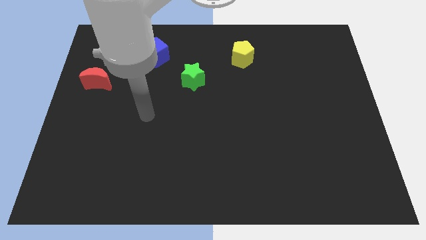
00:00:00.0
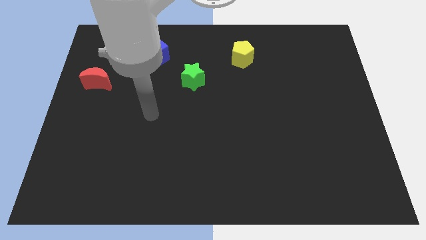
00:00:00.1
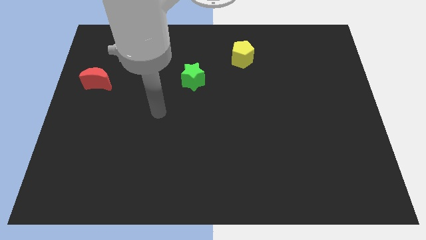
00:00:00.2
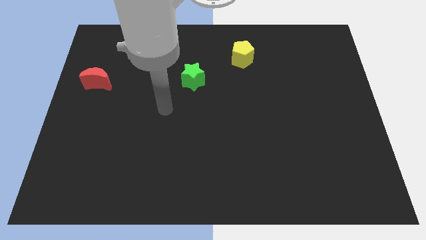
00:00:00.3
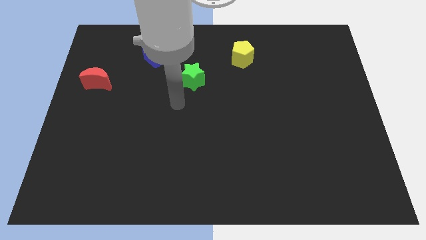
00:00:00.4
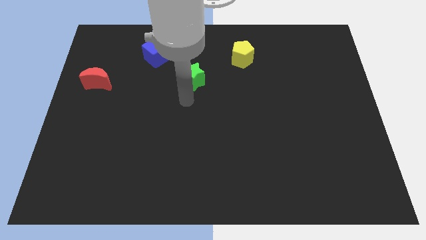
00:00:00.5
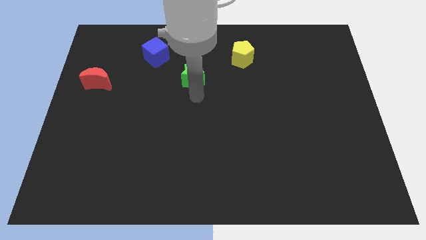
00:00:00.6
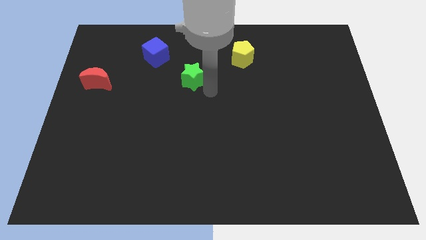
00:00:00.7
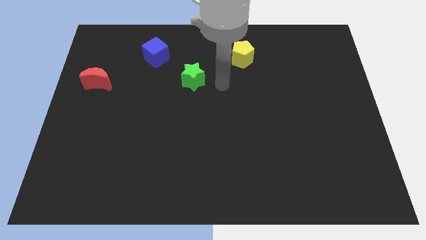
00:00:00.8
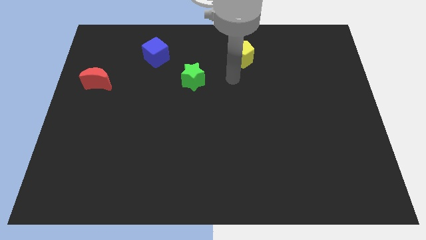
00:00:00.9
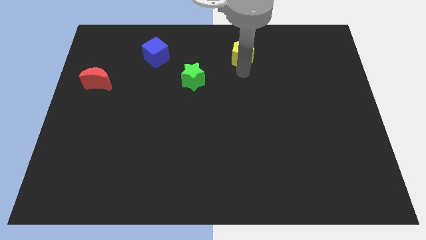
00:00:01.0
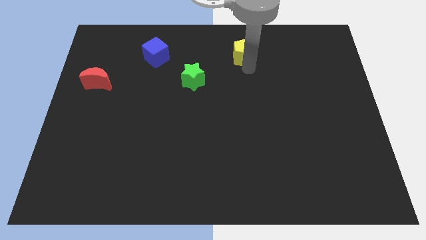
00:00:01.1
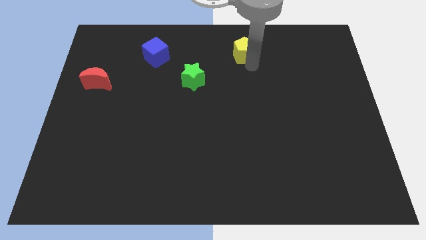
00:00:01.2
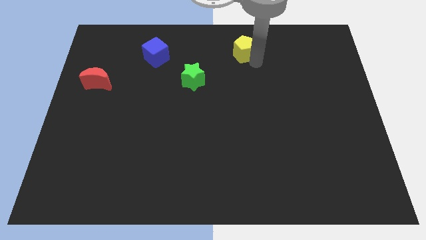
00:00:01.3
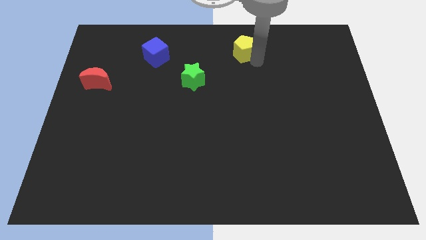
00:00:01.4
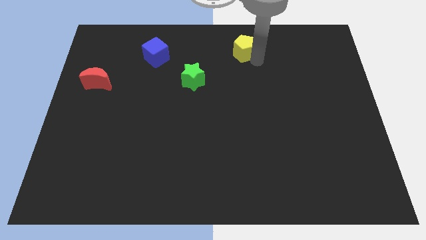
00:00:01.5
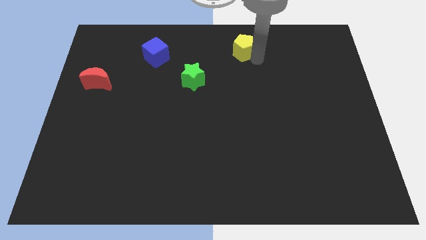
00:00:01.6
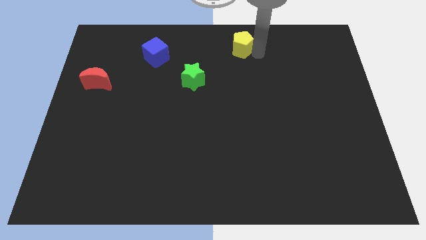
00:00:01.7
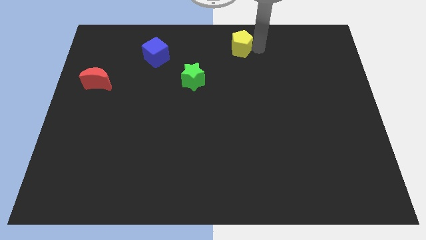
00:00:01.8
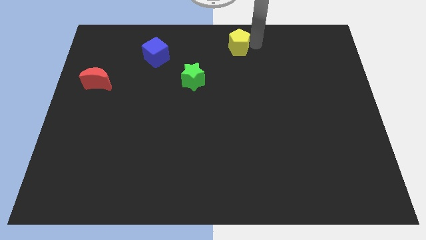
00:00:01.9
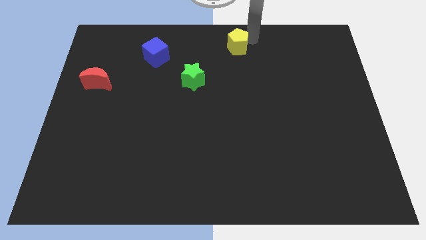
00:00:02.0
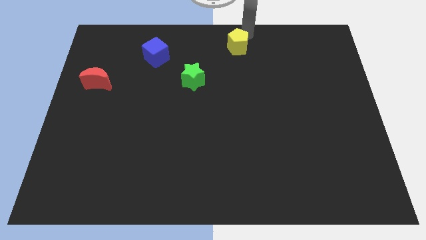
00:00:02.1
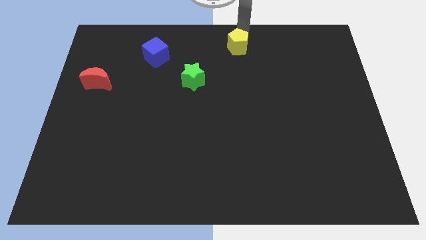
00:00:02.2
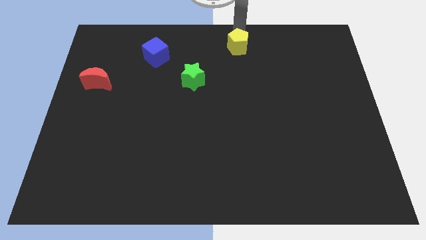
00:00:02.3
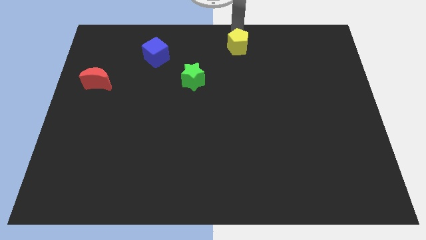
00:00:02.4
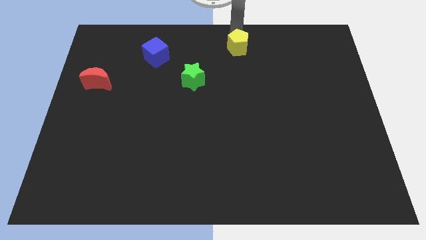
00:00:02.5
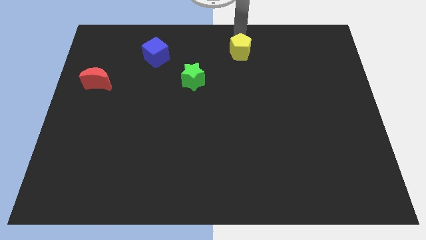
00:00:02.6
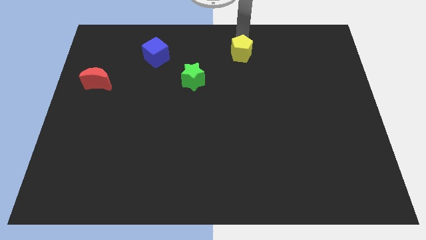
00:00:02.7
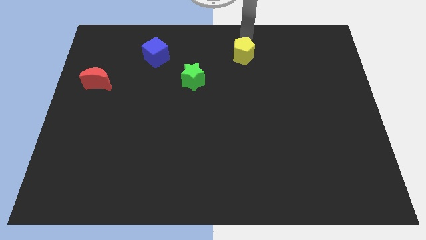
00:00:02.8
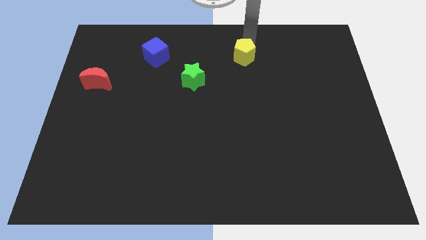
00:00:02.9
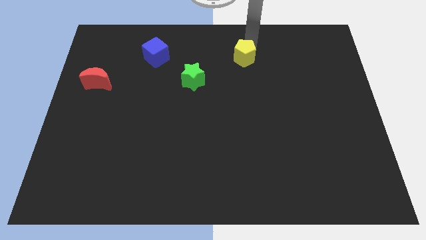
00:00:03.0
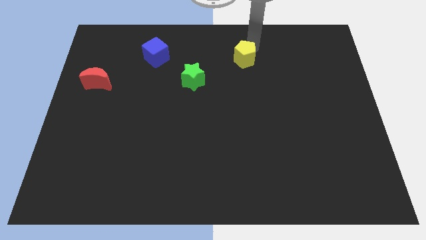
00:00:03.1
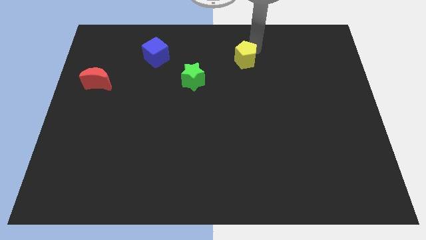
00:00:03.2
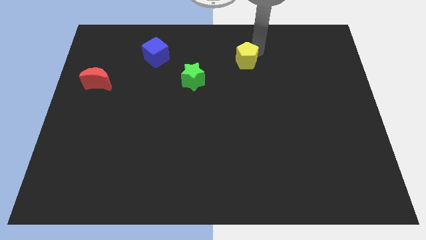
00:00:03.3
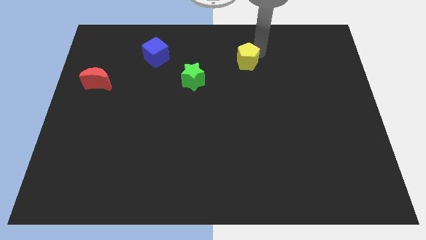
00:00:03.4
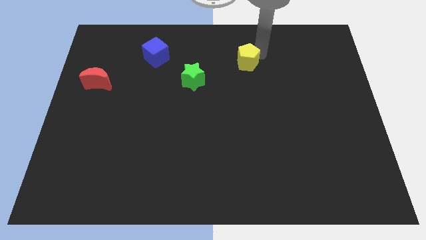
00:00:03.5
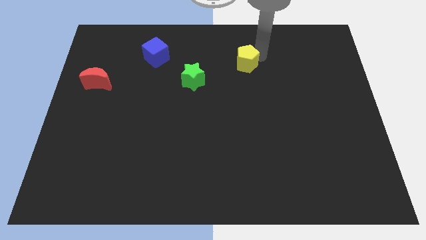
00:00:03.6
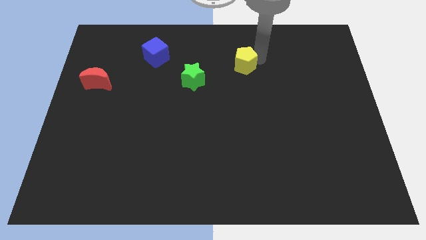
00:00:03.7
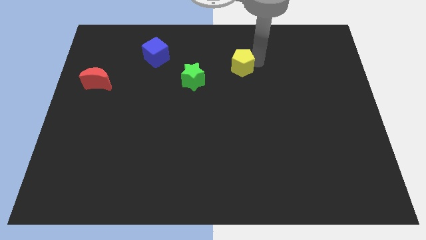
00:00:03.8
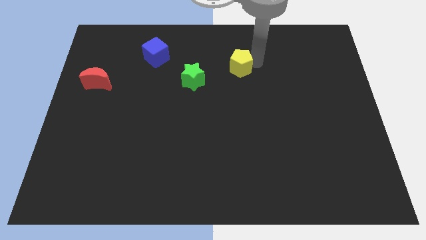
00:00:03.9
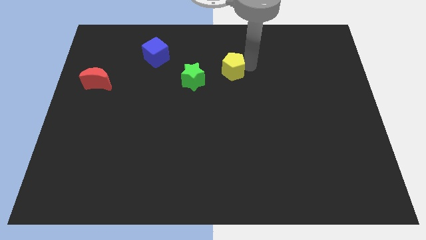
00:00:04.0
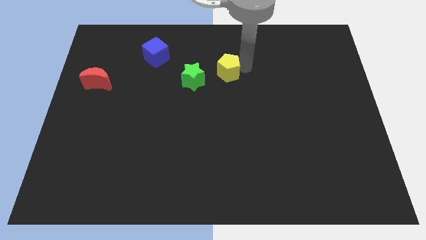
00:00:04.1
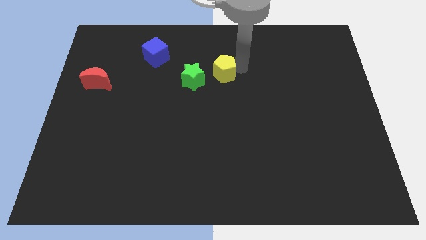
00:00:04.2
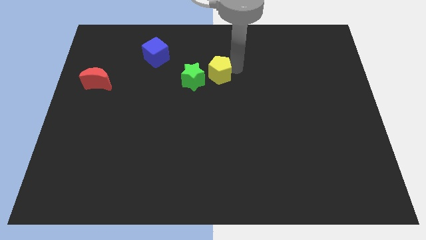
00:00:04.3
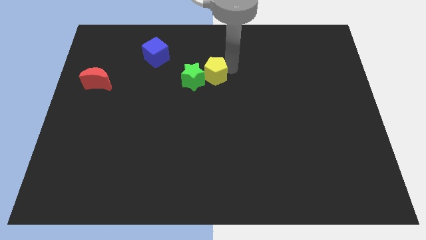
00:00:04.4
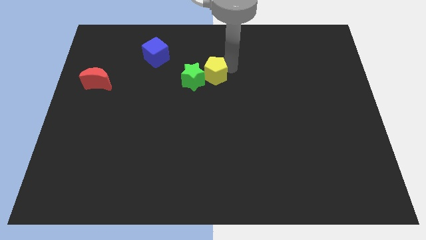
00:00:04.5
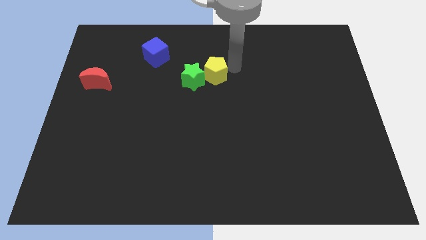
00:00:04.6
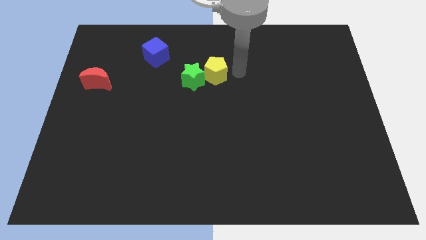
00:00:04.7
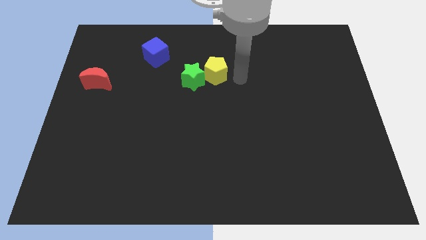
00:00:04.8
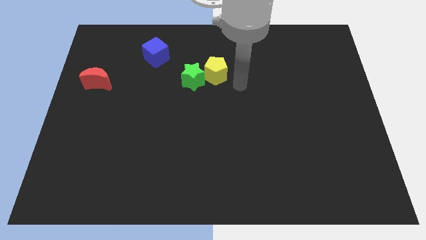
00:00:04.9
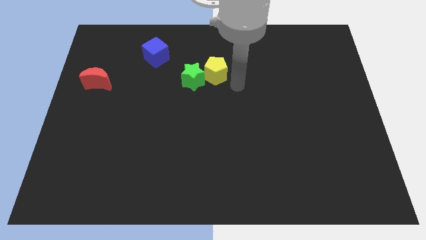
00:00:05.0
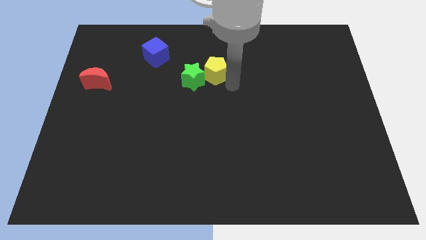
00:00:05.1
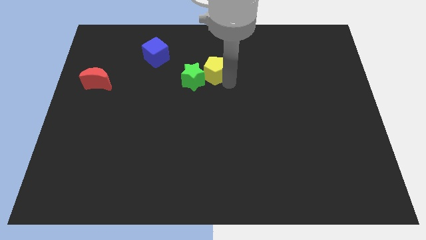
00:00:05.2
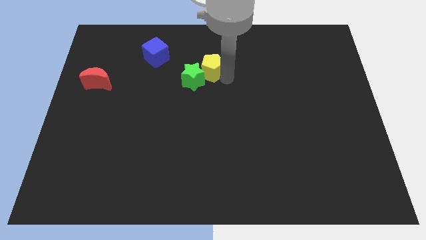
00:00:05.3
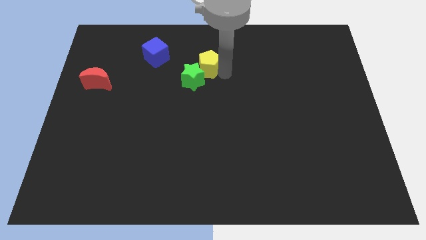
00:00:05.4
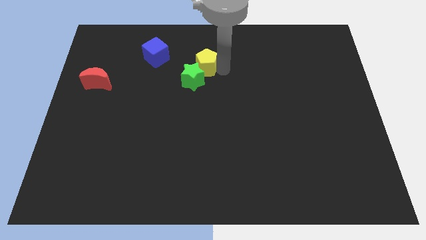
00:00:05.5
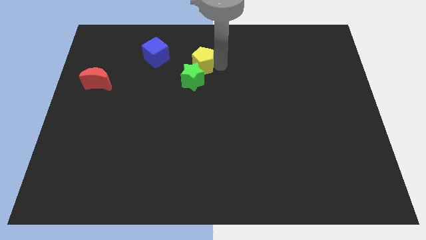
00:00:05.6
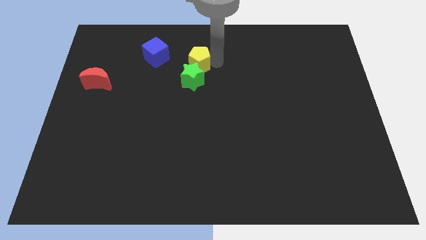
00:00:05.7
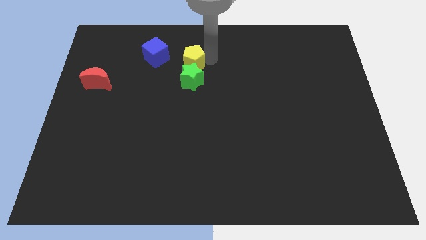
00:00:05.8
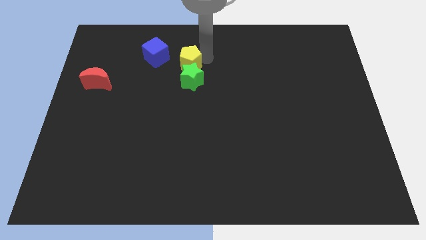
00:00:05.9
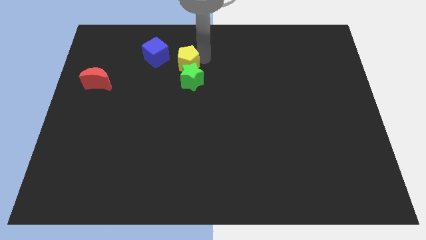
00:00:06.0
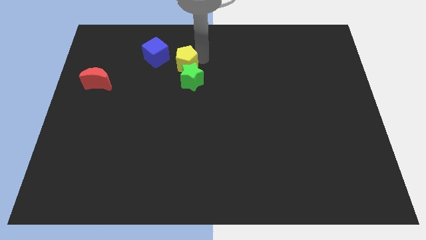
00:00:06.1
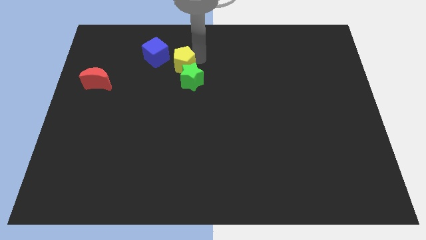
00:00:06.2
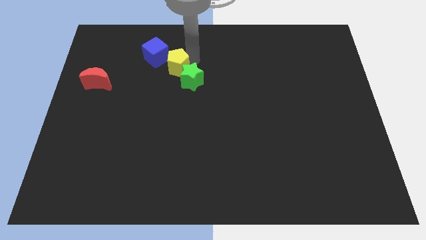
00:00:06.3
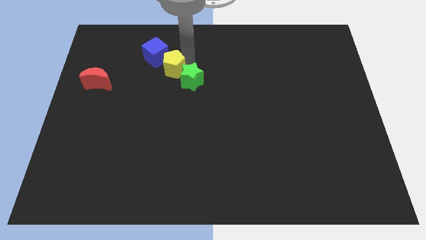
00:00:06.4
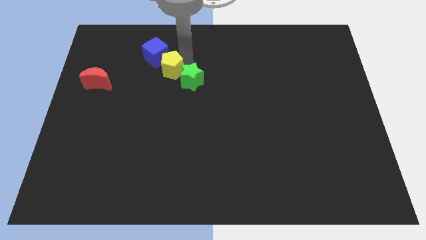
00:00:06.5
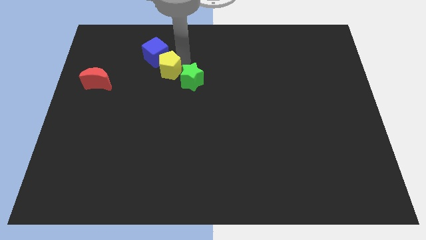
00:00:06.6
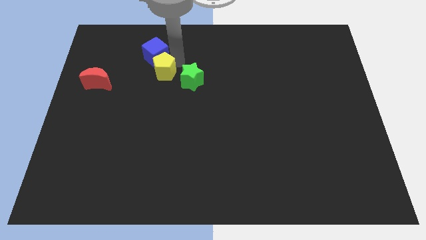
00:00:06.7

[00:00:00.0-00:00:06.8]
put the yellow block to the cube

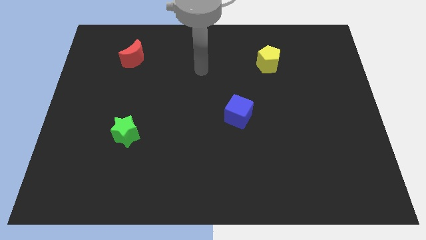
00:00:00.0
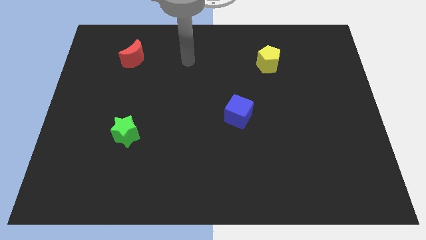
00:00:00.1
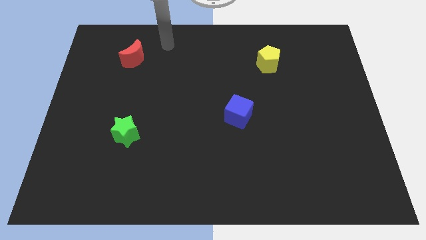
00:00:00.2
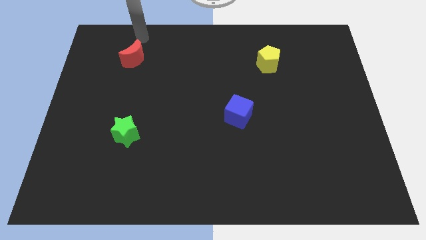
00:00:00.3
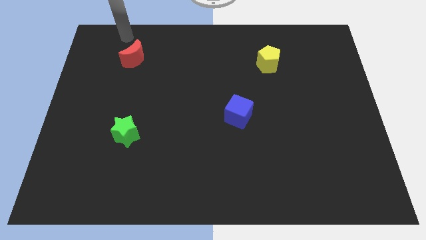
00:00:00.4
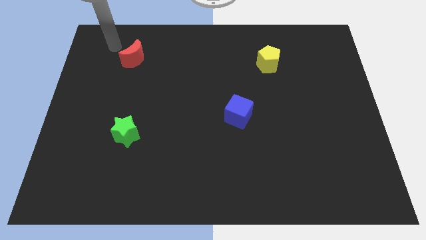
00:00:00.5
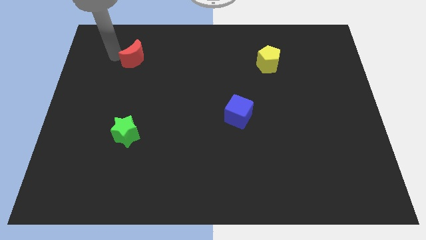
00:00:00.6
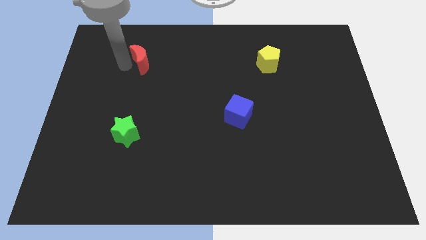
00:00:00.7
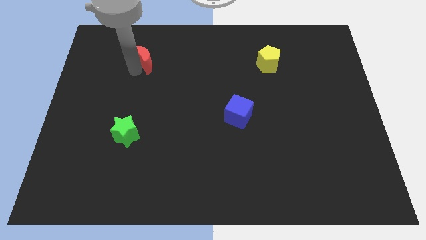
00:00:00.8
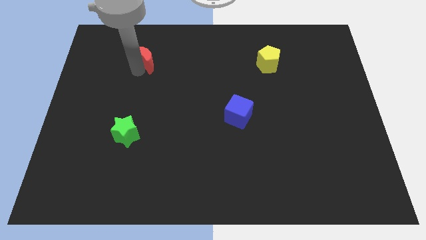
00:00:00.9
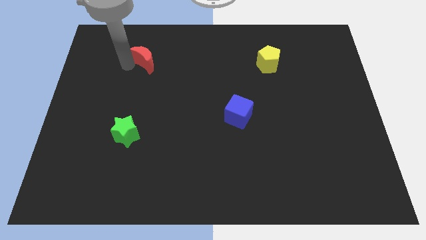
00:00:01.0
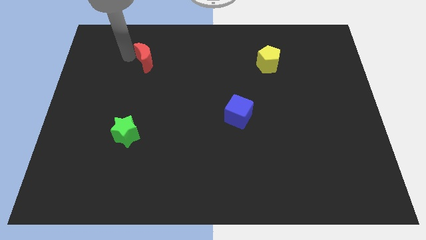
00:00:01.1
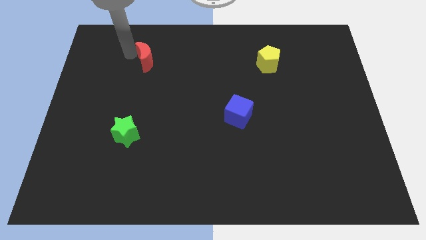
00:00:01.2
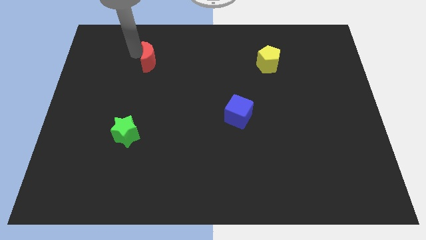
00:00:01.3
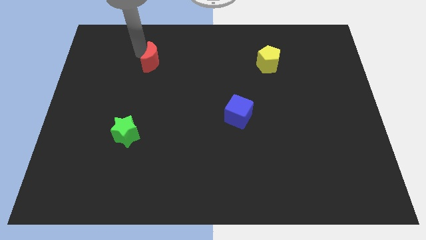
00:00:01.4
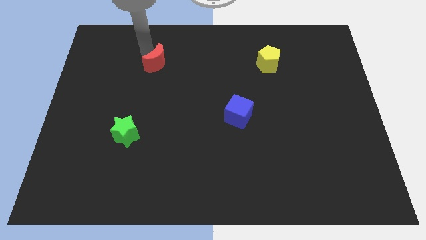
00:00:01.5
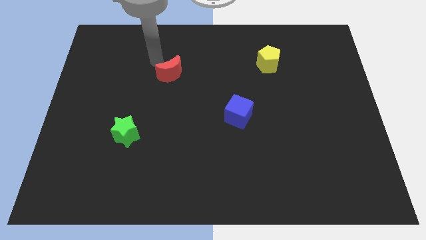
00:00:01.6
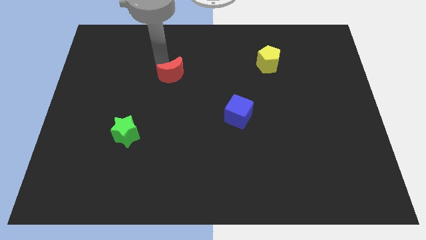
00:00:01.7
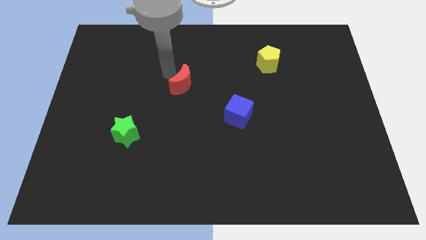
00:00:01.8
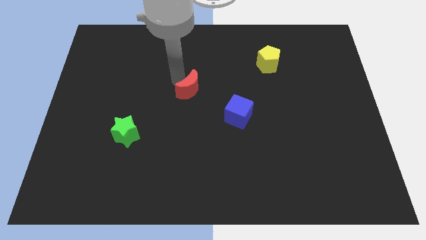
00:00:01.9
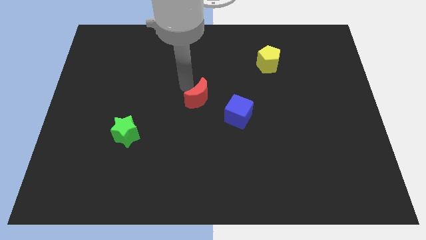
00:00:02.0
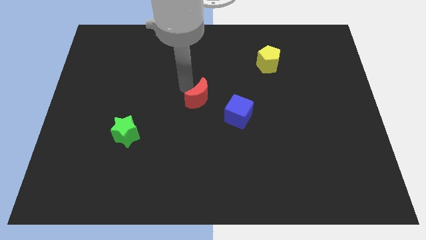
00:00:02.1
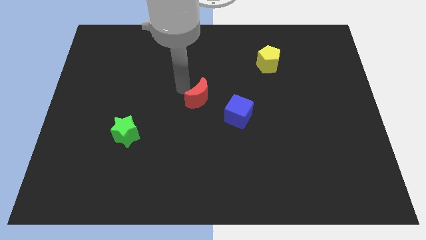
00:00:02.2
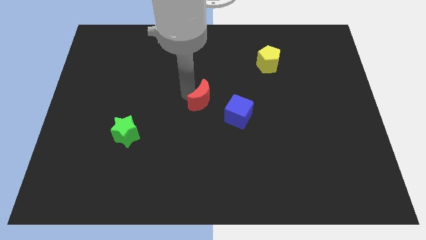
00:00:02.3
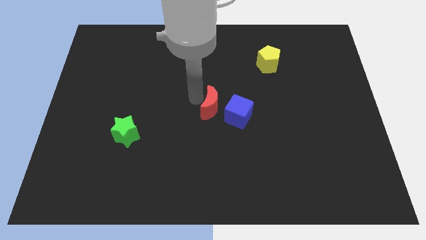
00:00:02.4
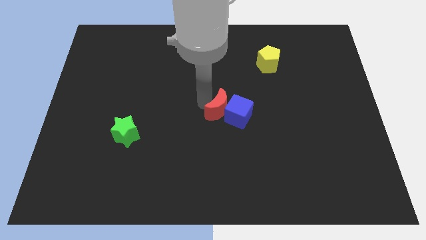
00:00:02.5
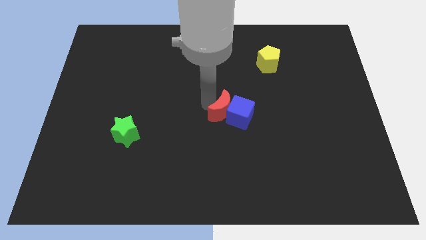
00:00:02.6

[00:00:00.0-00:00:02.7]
push the moon close to the cube
